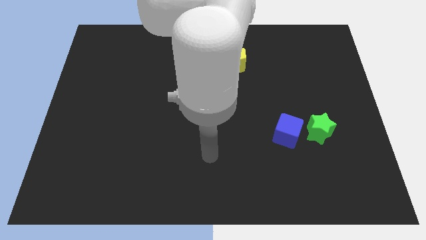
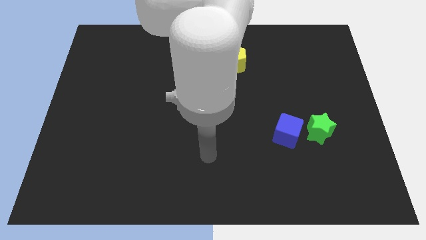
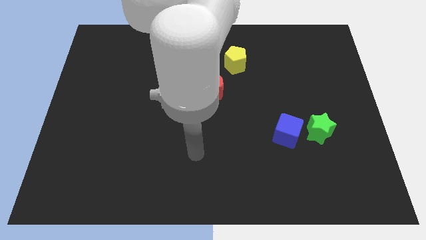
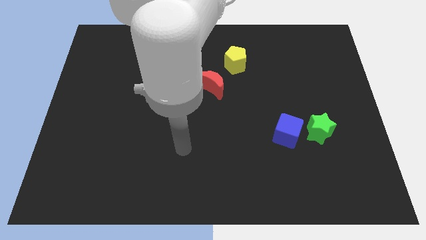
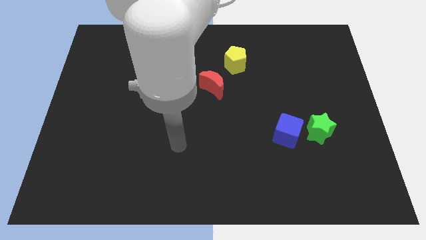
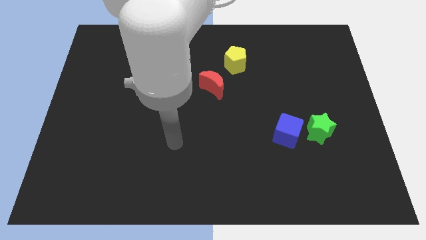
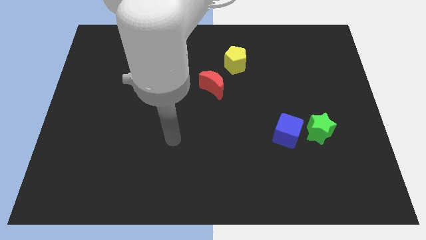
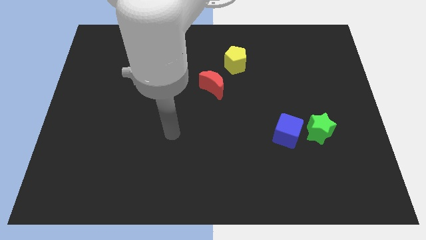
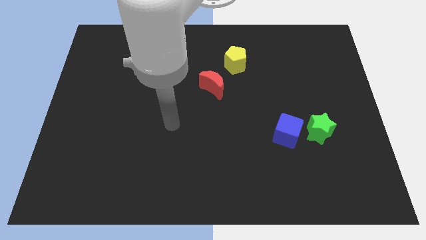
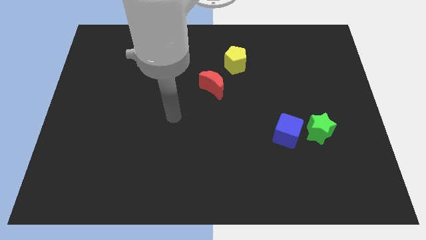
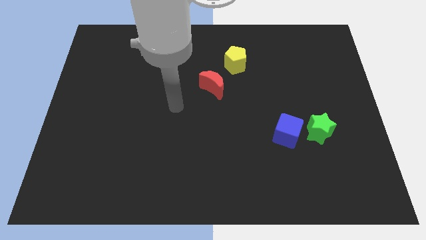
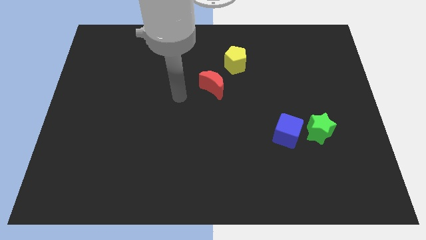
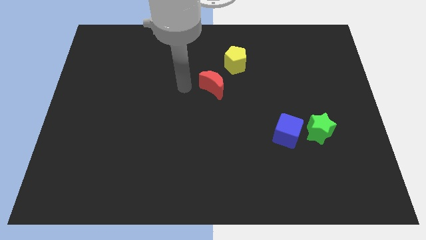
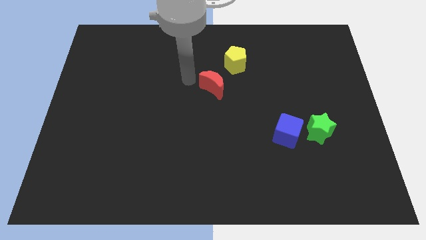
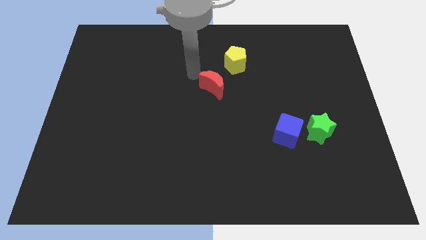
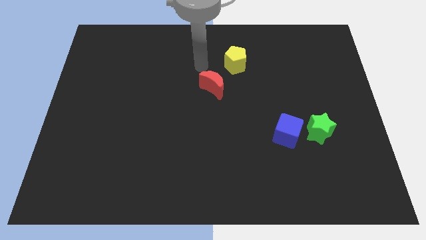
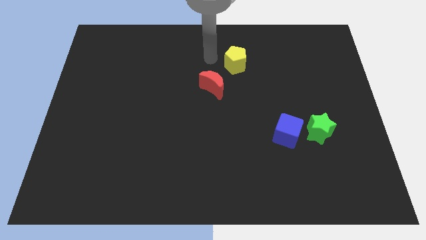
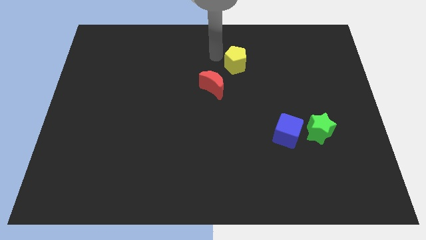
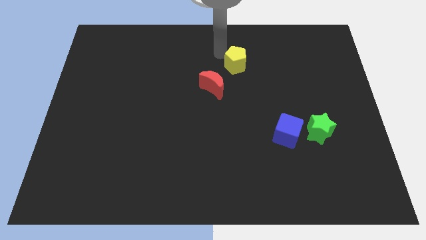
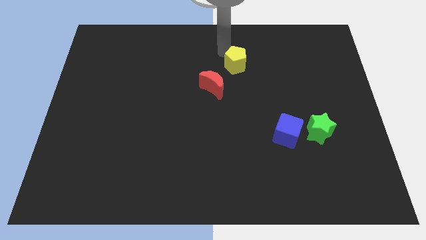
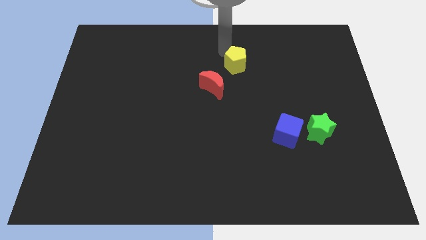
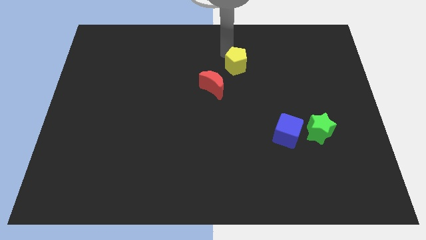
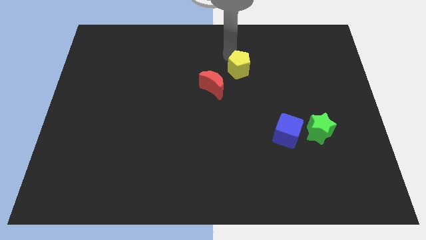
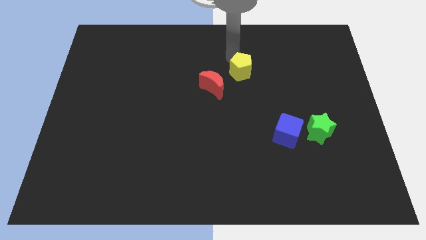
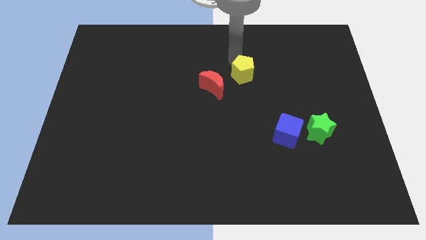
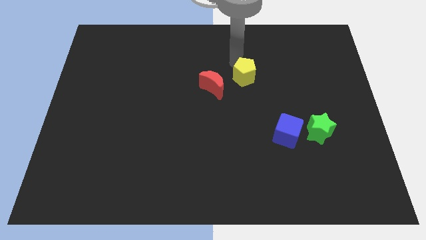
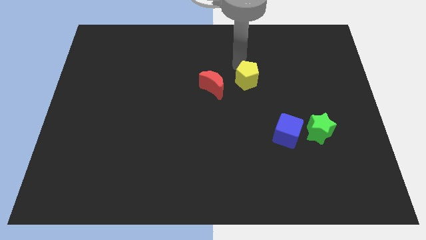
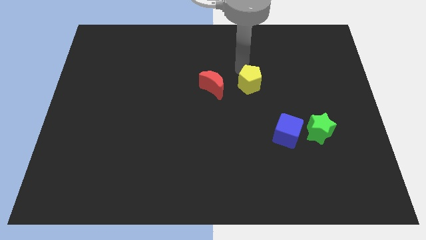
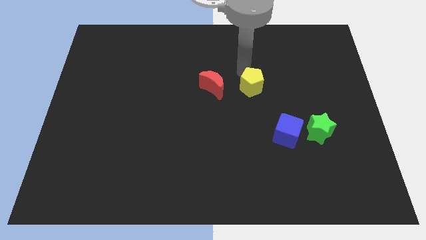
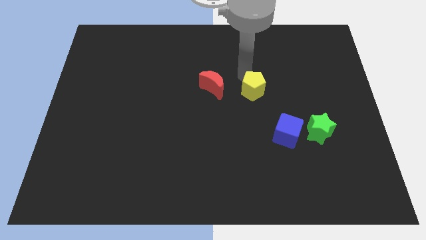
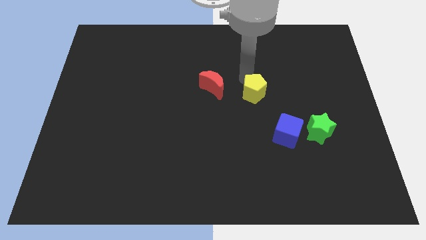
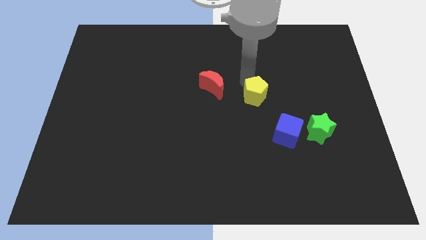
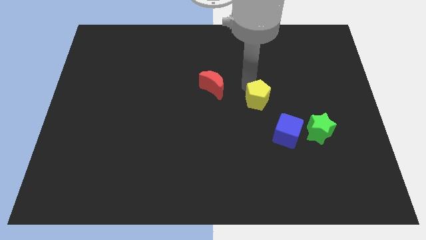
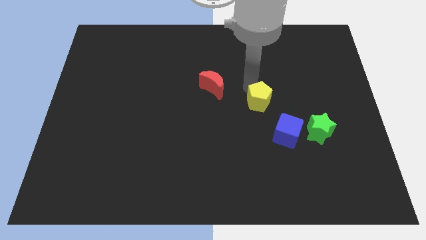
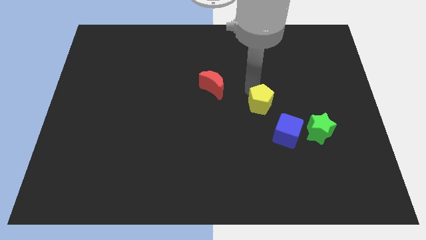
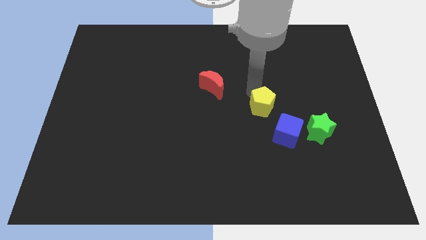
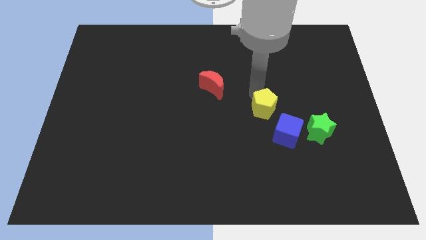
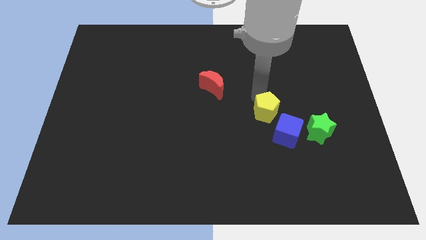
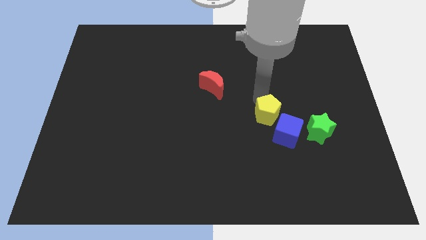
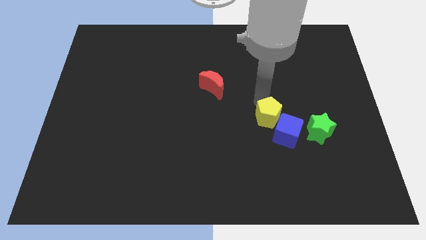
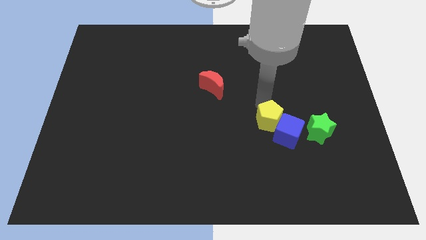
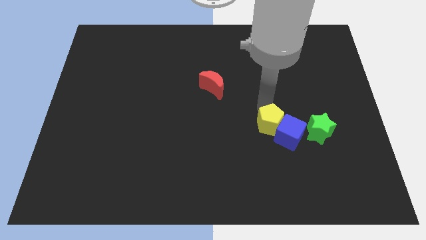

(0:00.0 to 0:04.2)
push the pentagon next to the blue block

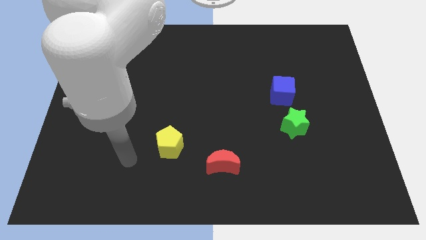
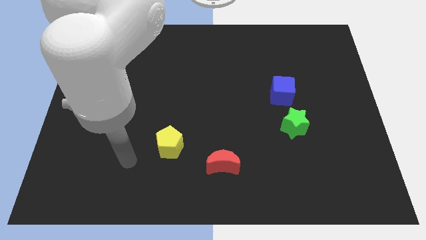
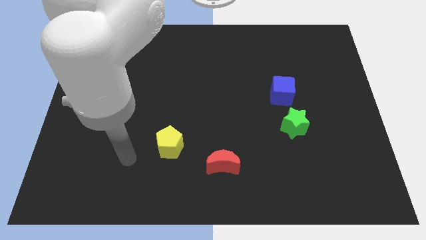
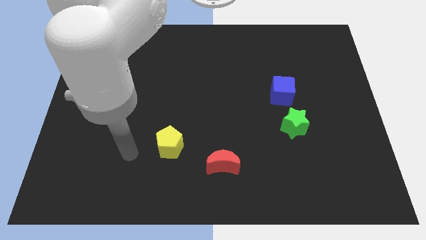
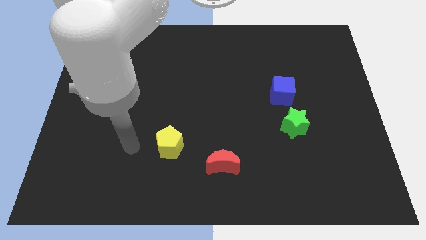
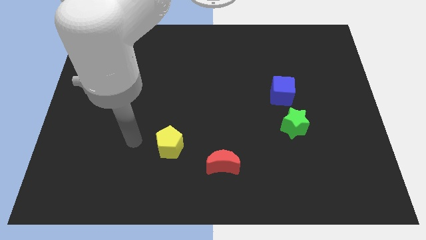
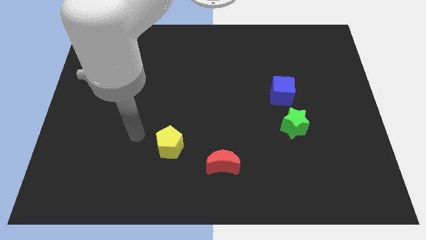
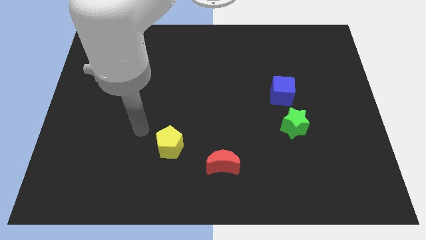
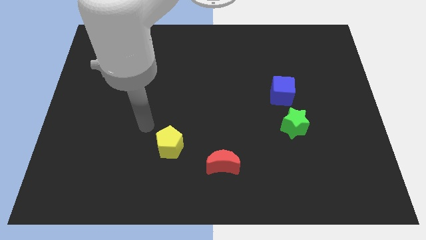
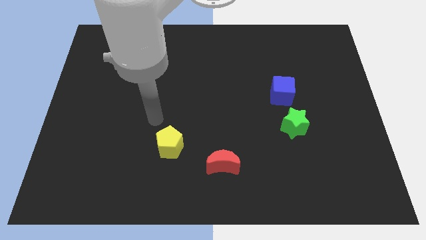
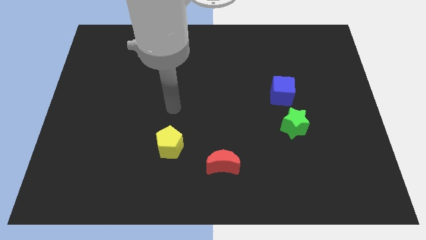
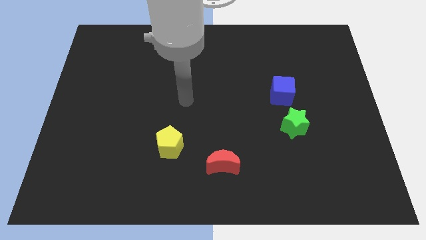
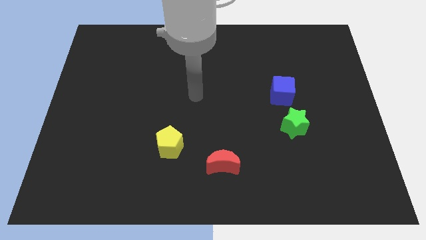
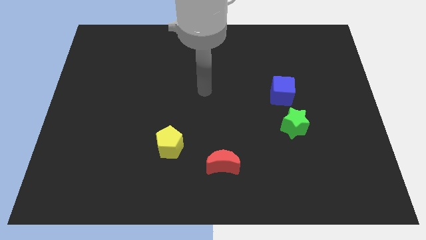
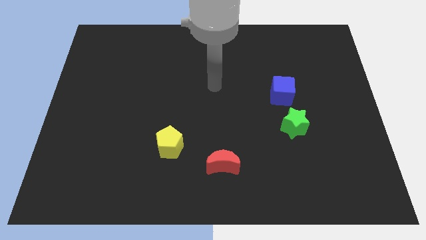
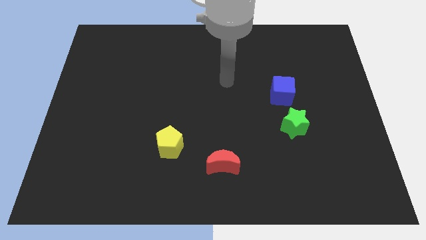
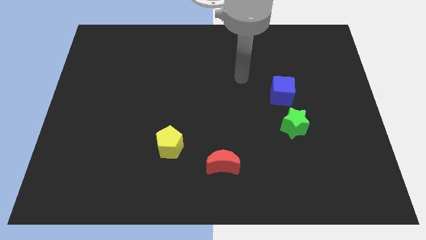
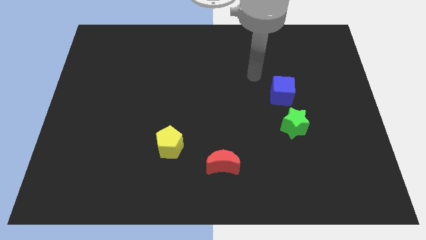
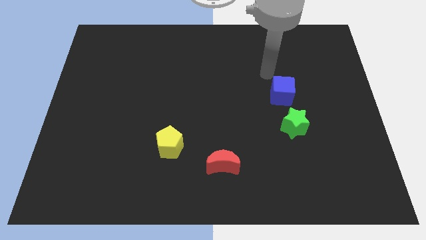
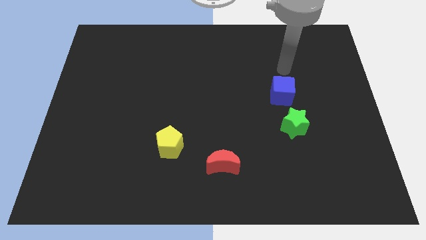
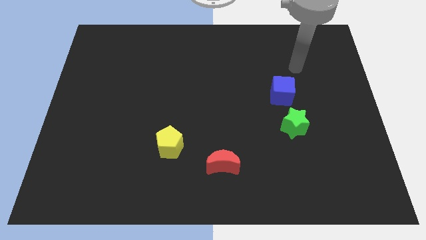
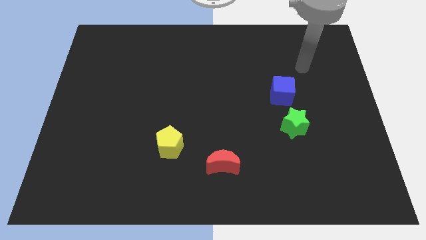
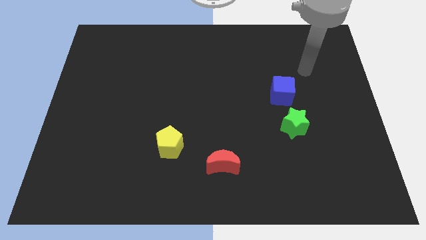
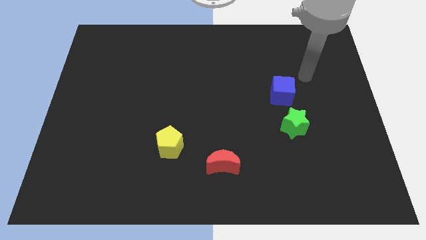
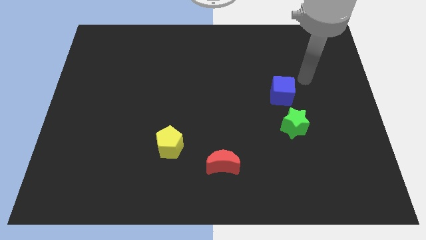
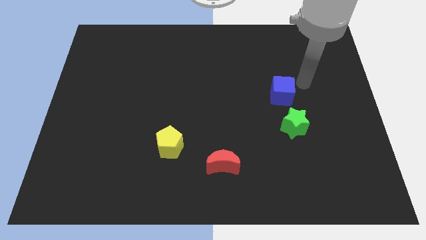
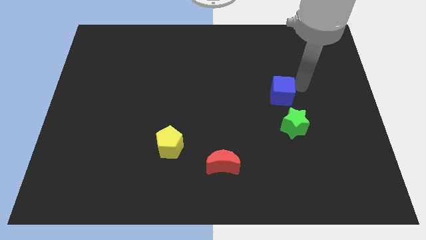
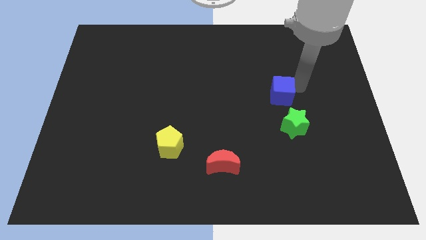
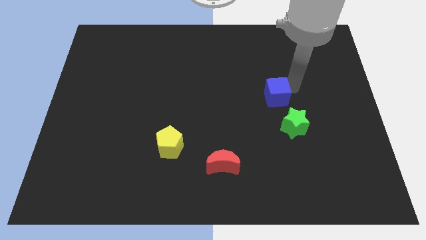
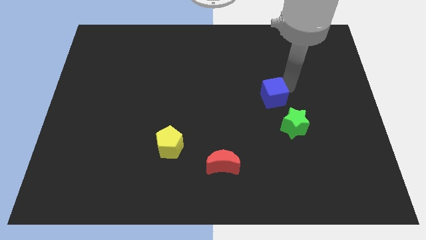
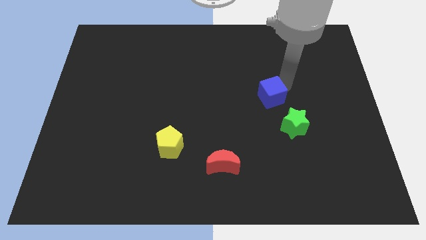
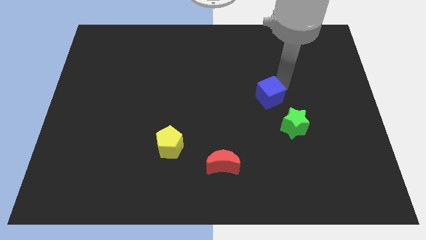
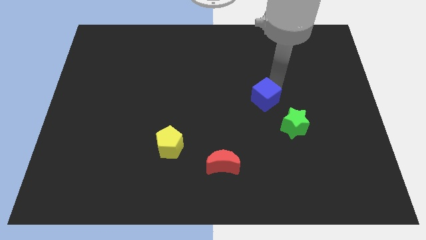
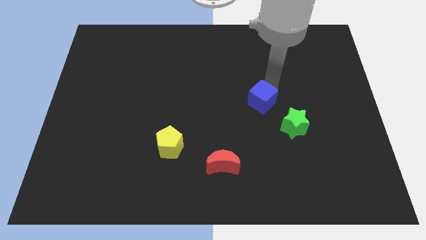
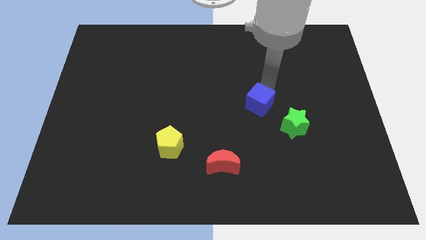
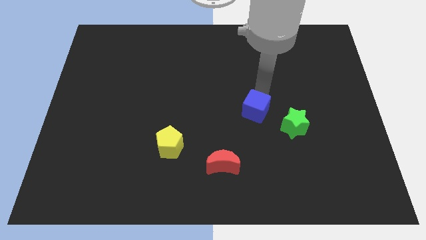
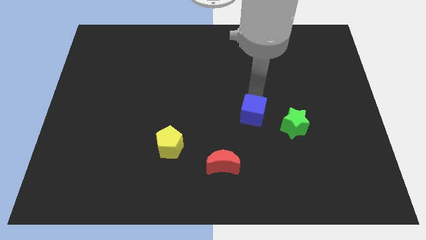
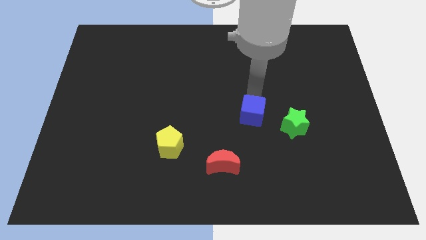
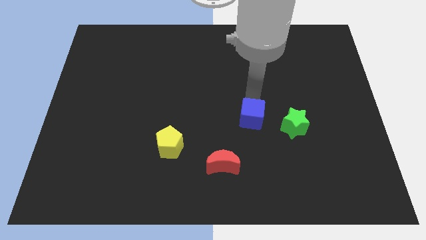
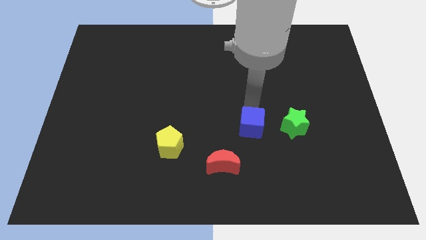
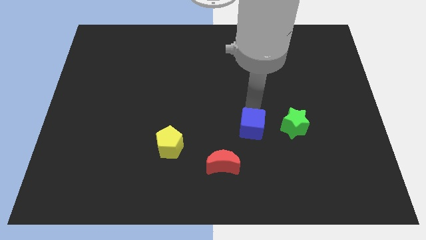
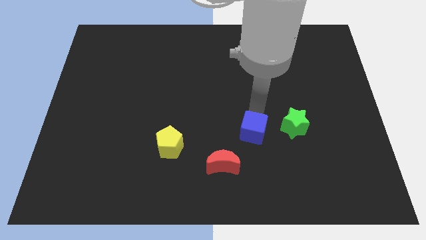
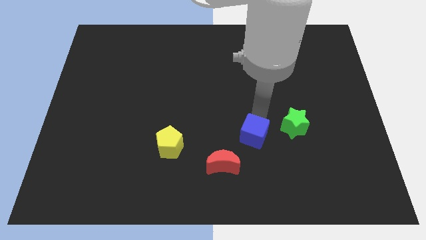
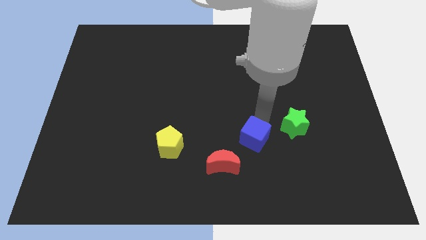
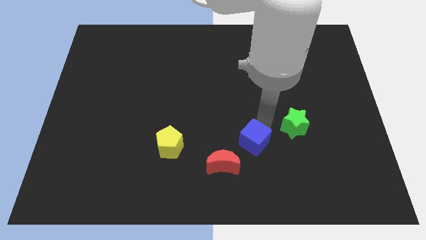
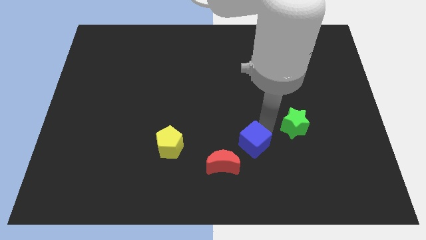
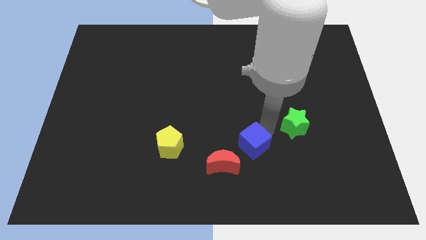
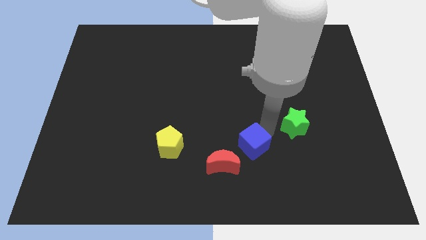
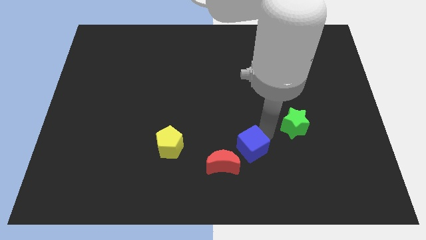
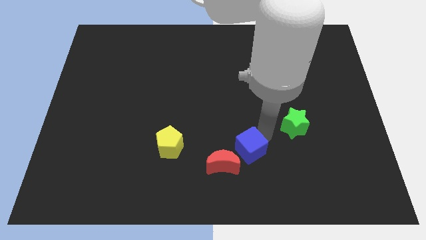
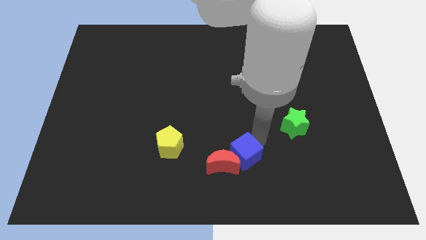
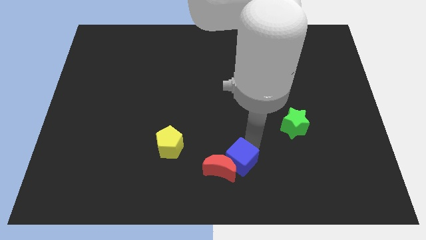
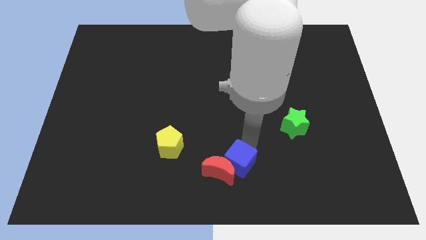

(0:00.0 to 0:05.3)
slide the blue cube close to the red block
